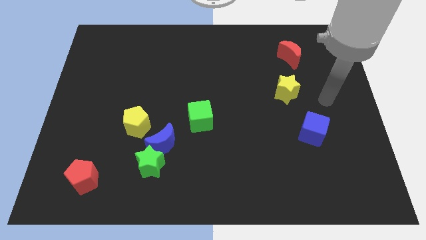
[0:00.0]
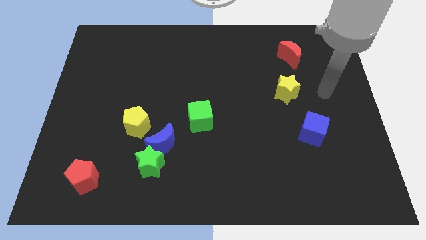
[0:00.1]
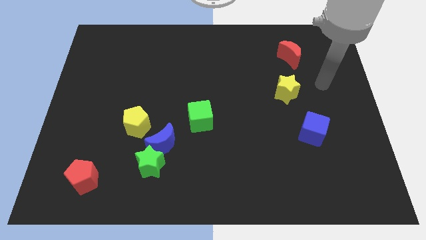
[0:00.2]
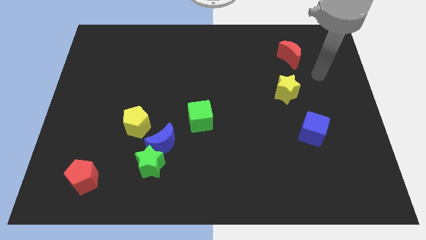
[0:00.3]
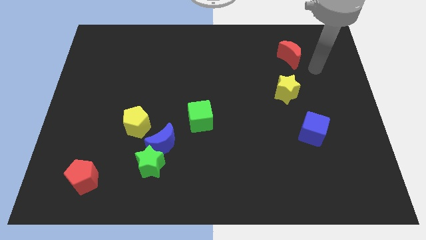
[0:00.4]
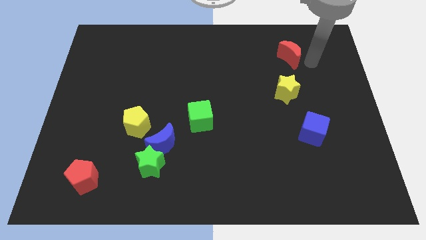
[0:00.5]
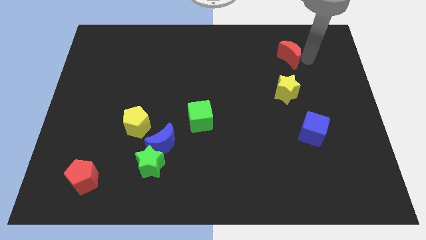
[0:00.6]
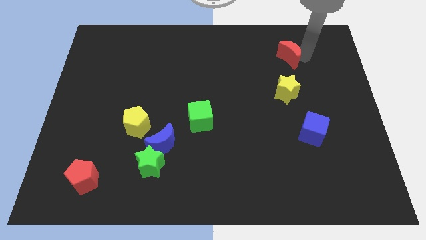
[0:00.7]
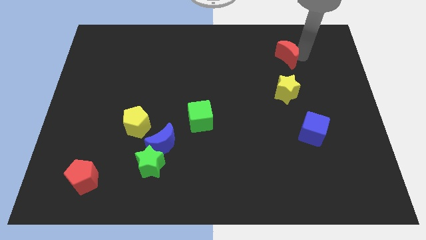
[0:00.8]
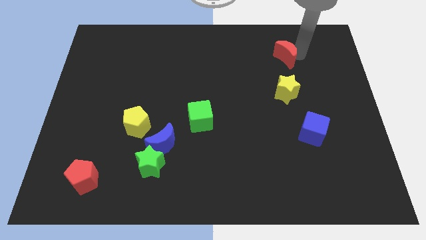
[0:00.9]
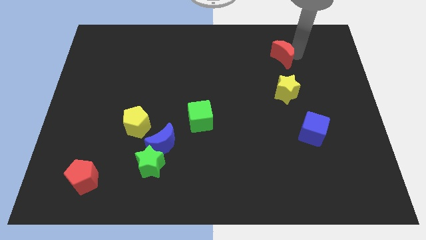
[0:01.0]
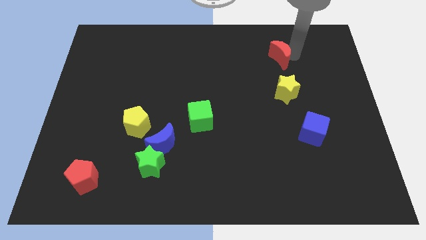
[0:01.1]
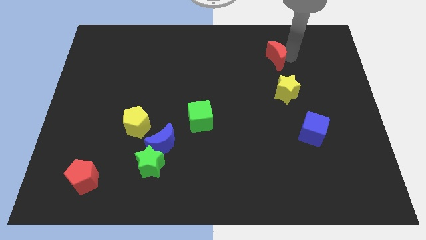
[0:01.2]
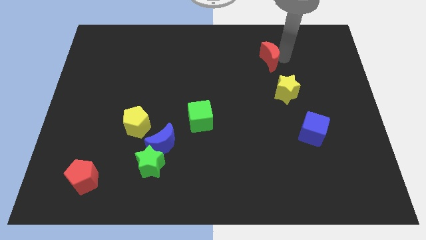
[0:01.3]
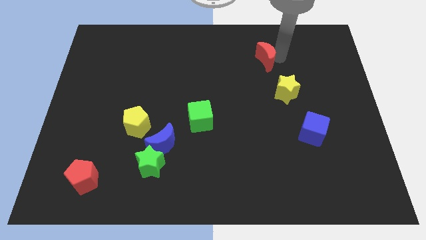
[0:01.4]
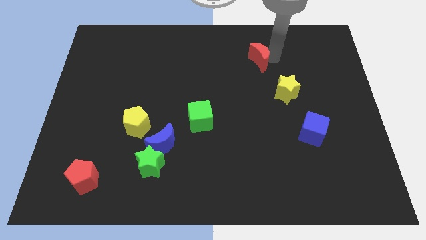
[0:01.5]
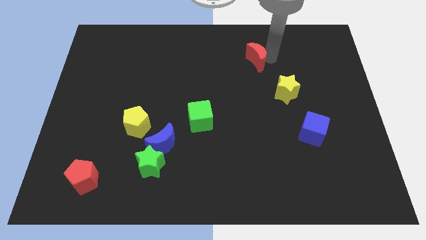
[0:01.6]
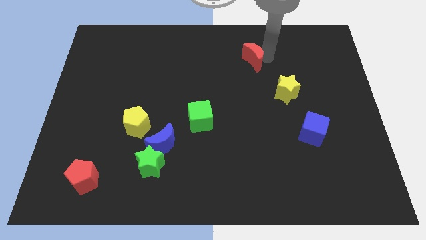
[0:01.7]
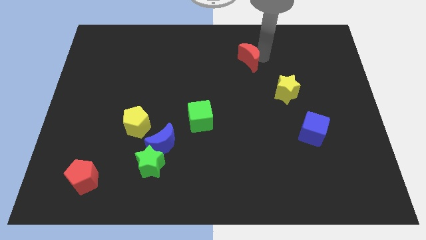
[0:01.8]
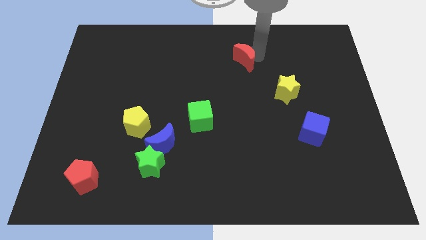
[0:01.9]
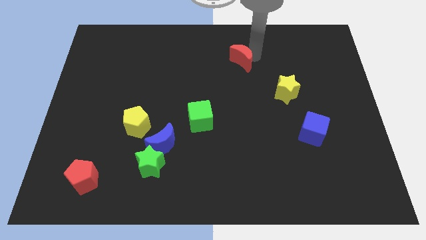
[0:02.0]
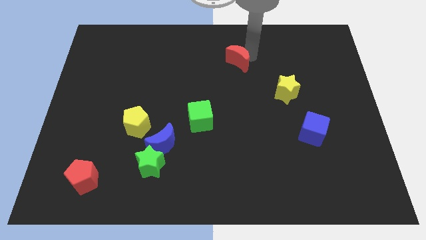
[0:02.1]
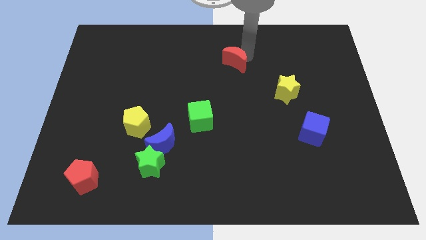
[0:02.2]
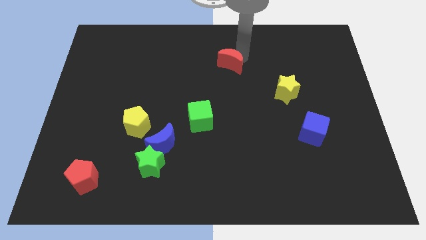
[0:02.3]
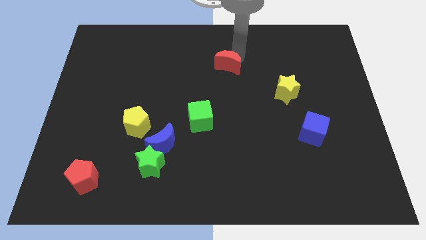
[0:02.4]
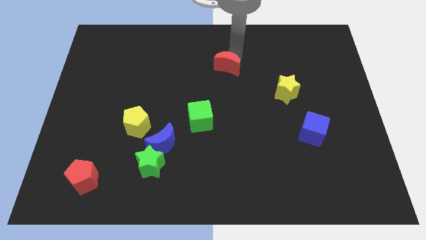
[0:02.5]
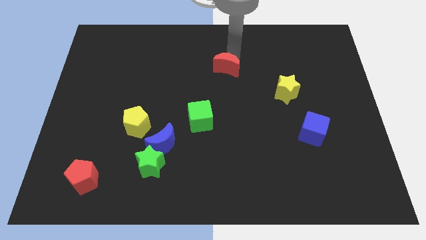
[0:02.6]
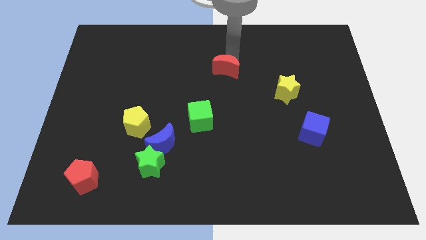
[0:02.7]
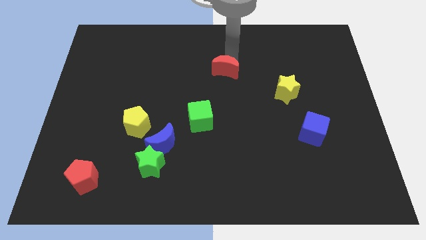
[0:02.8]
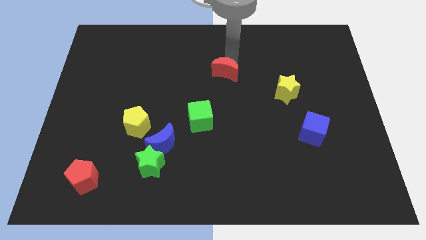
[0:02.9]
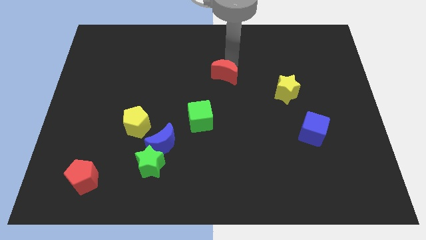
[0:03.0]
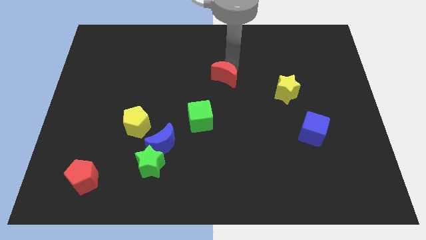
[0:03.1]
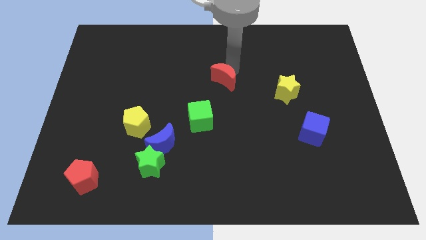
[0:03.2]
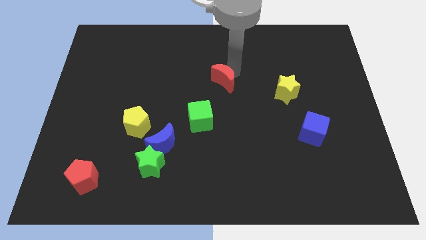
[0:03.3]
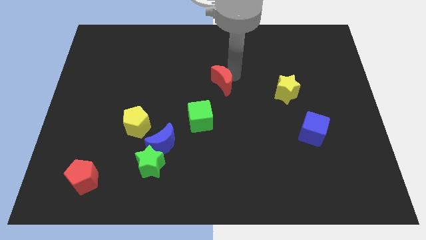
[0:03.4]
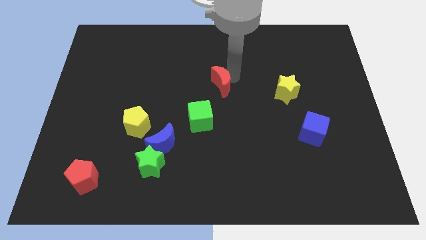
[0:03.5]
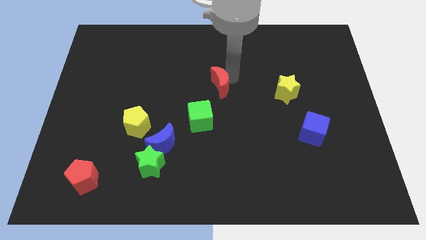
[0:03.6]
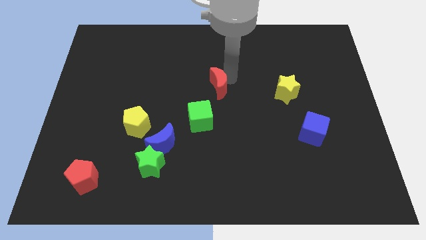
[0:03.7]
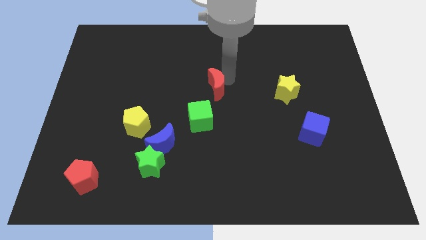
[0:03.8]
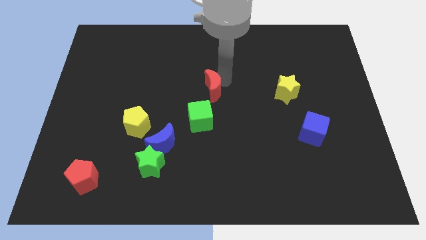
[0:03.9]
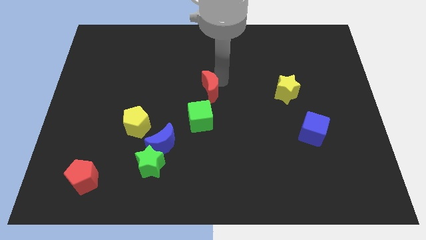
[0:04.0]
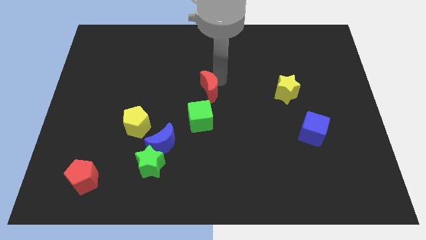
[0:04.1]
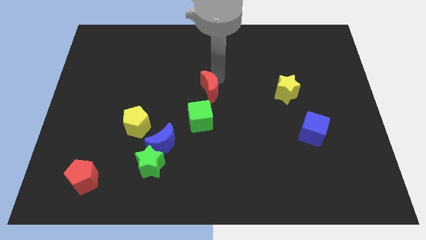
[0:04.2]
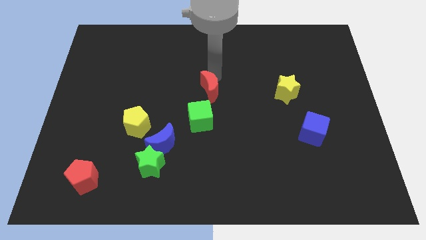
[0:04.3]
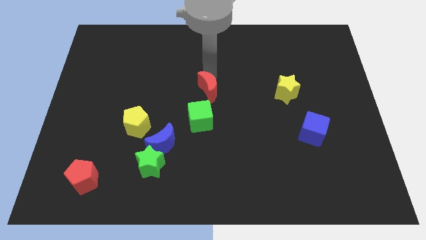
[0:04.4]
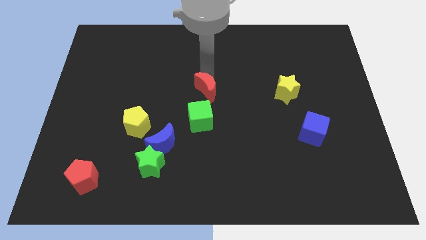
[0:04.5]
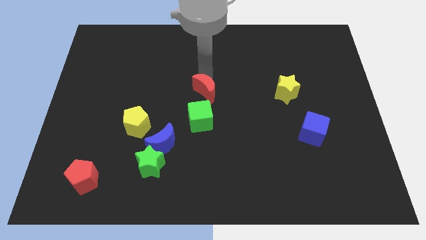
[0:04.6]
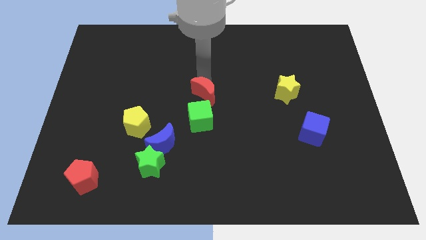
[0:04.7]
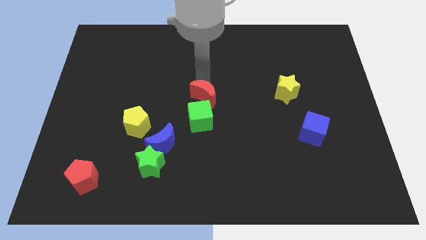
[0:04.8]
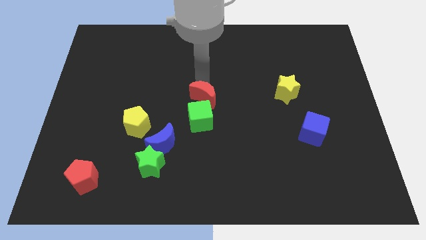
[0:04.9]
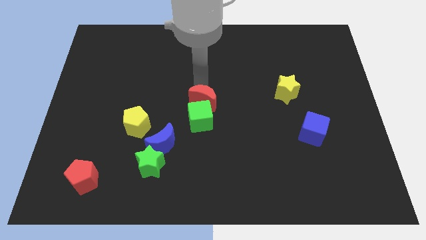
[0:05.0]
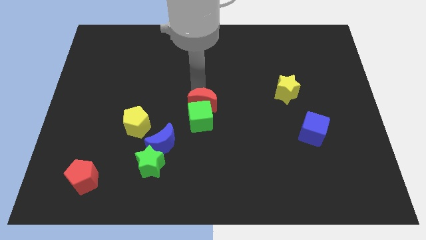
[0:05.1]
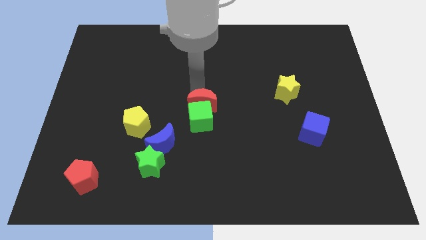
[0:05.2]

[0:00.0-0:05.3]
push the red moon to the green cube

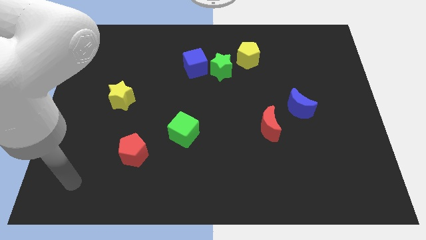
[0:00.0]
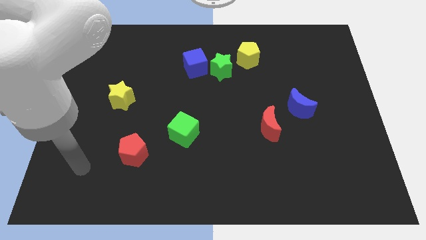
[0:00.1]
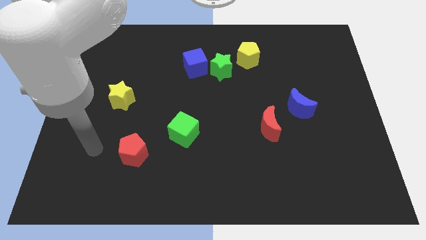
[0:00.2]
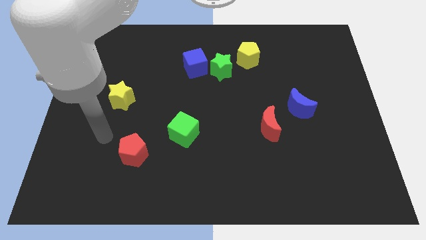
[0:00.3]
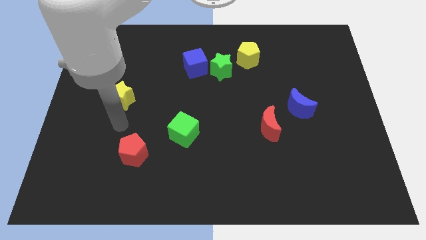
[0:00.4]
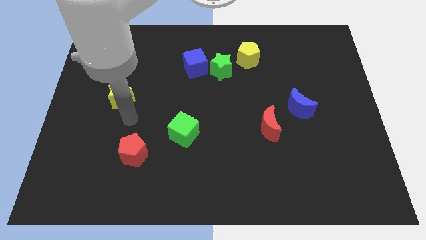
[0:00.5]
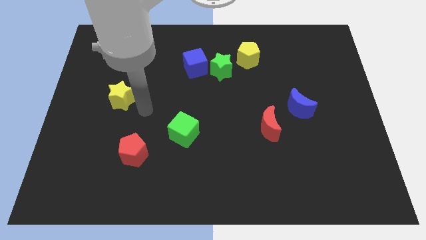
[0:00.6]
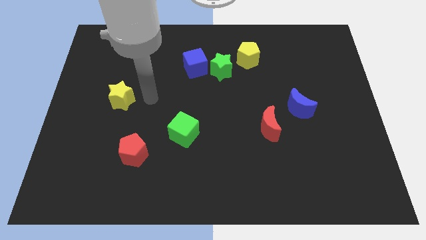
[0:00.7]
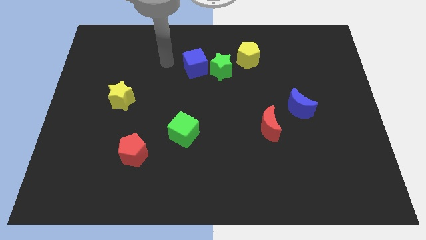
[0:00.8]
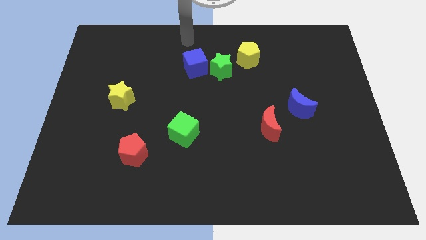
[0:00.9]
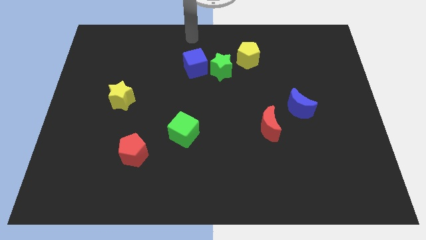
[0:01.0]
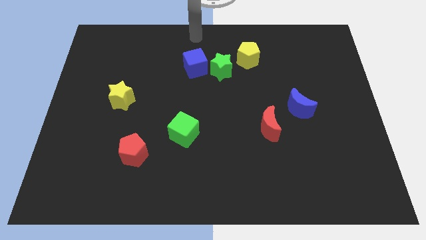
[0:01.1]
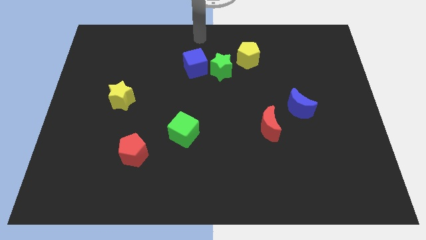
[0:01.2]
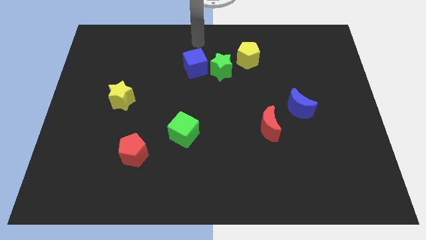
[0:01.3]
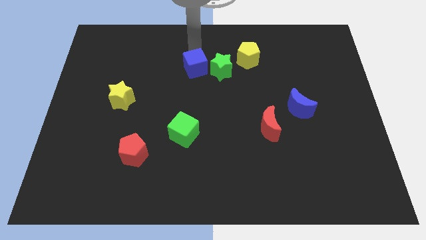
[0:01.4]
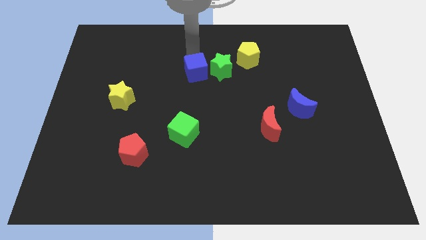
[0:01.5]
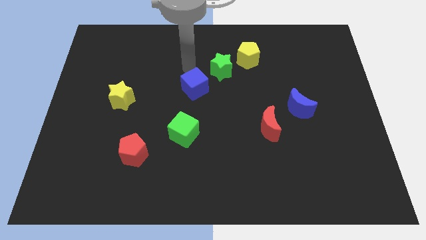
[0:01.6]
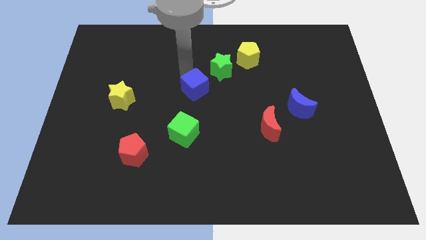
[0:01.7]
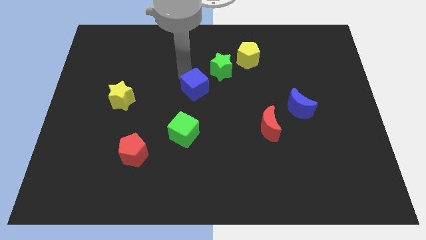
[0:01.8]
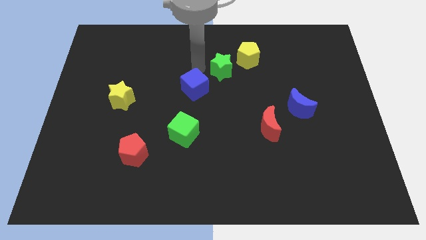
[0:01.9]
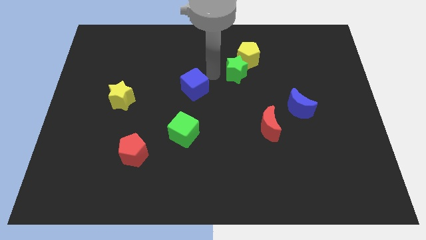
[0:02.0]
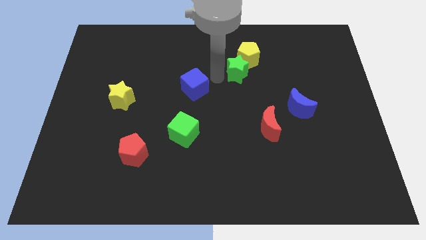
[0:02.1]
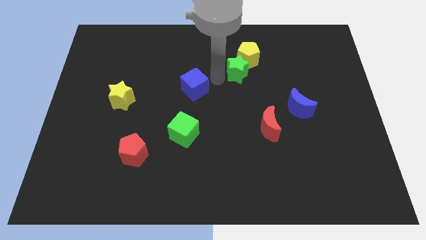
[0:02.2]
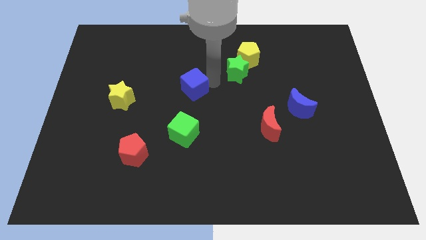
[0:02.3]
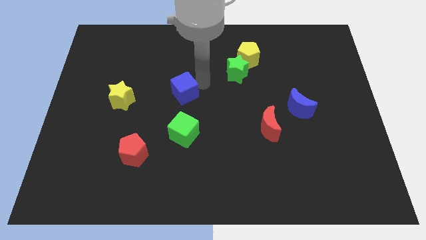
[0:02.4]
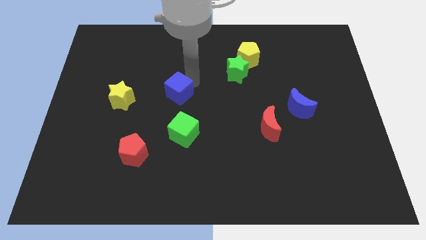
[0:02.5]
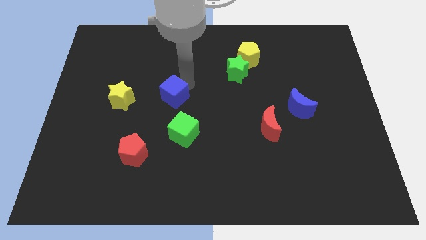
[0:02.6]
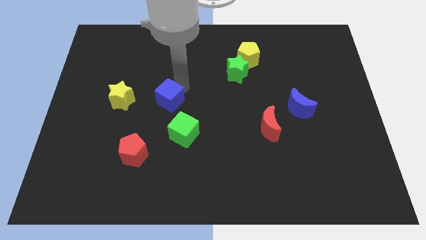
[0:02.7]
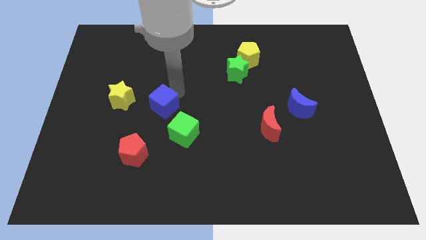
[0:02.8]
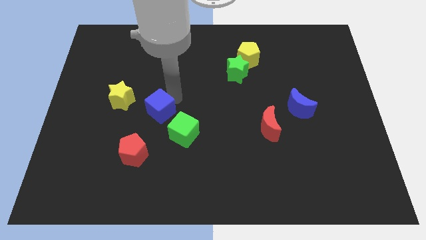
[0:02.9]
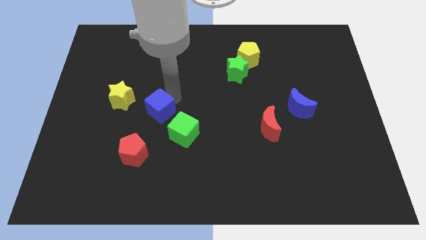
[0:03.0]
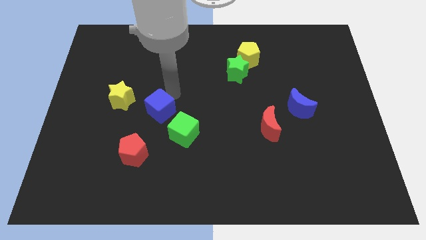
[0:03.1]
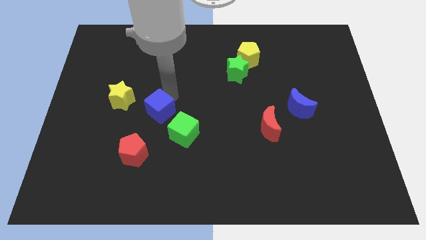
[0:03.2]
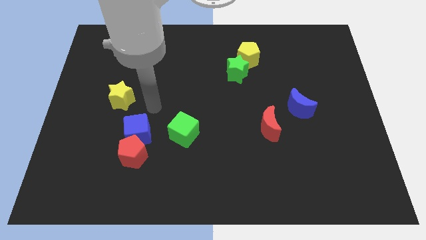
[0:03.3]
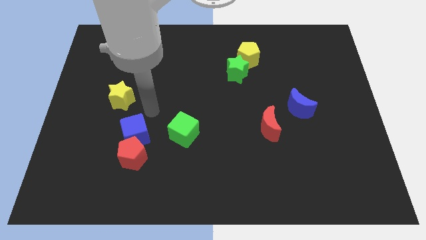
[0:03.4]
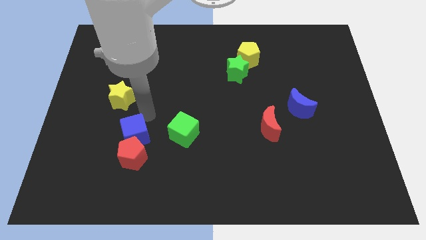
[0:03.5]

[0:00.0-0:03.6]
move the blue cube to the red pentagon
